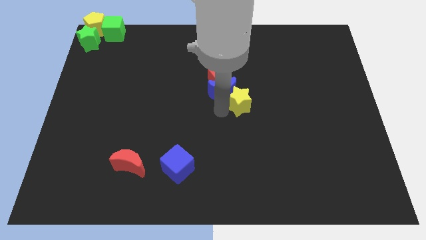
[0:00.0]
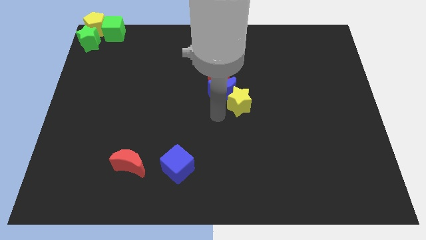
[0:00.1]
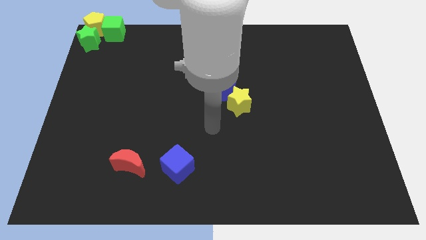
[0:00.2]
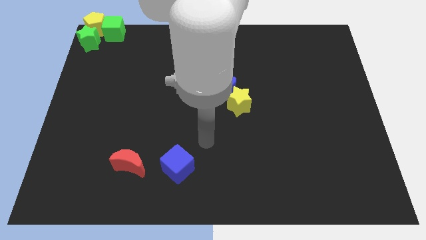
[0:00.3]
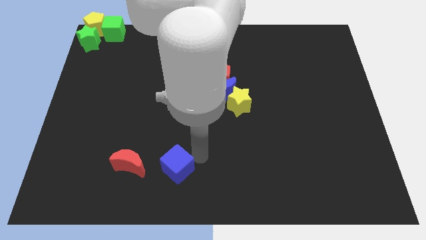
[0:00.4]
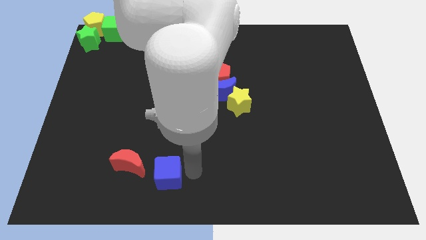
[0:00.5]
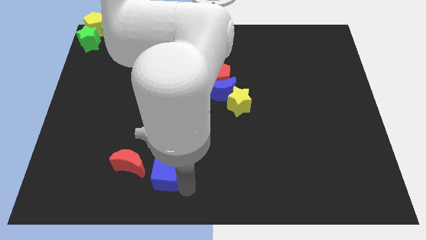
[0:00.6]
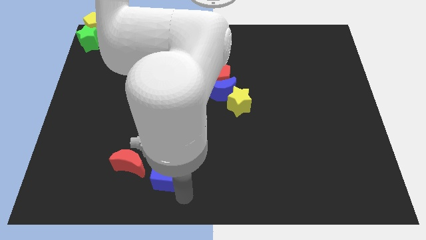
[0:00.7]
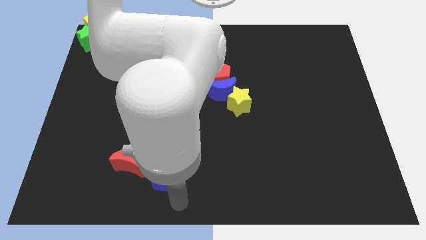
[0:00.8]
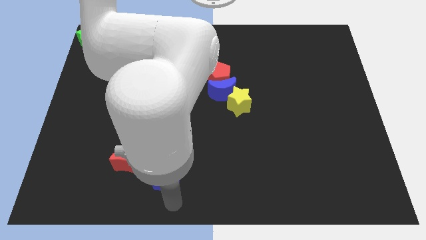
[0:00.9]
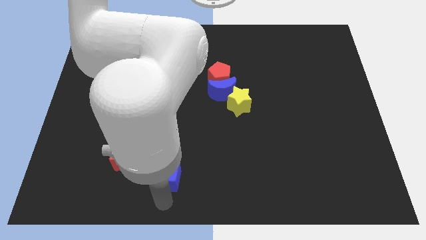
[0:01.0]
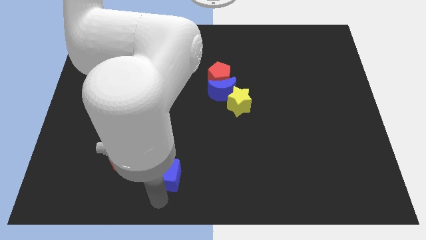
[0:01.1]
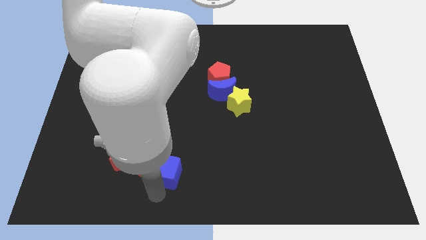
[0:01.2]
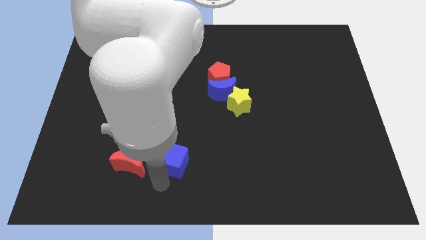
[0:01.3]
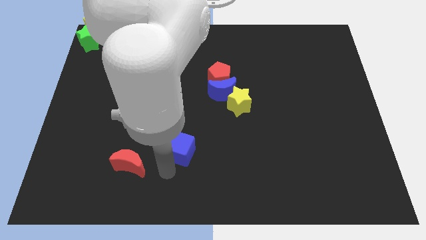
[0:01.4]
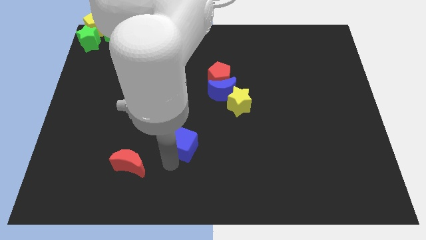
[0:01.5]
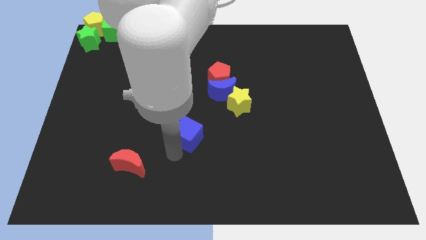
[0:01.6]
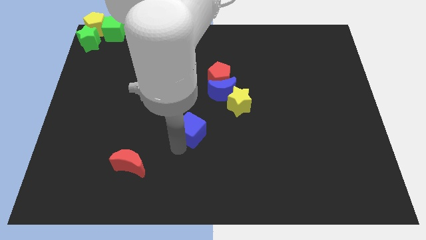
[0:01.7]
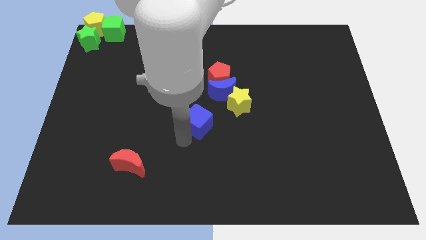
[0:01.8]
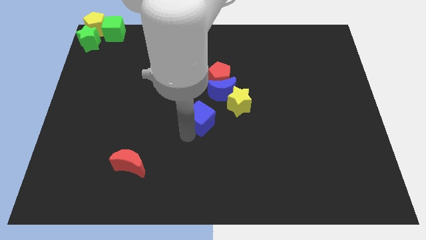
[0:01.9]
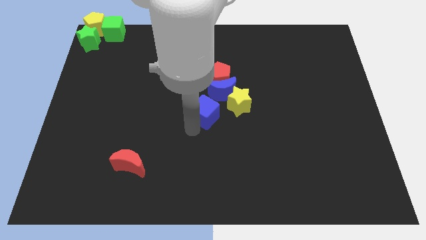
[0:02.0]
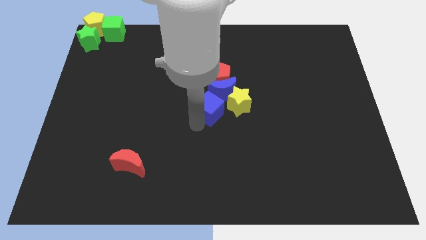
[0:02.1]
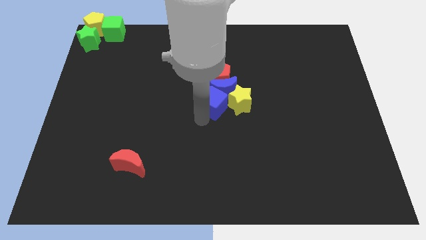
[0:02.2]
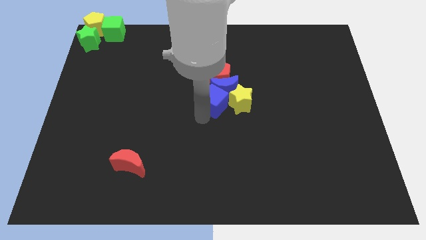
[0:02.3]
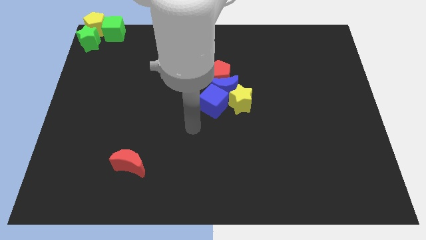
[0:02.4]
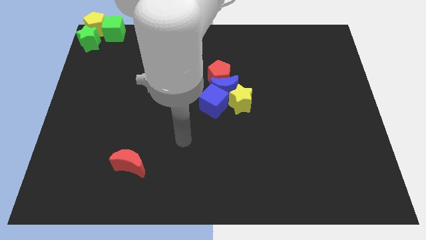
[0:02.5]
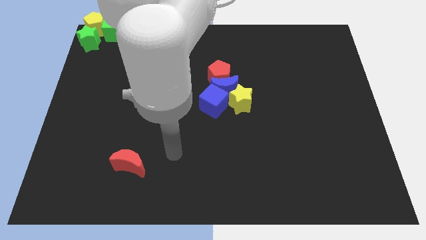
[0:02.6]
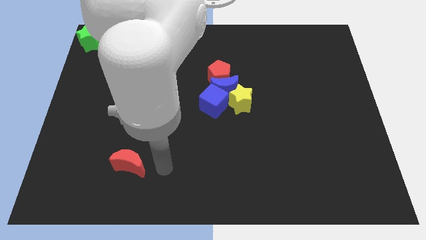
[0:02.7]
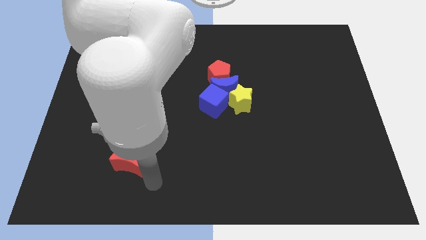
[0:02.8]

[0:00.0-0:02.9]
push the blue cube into the group of objects

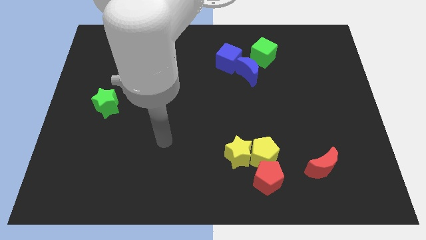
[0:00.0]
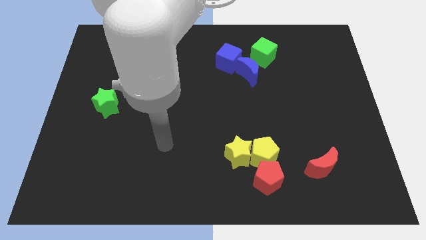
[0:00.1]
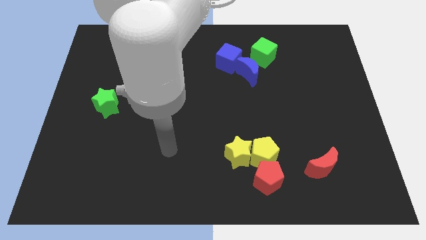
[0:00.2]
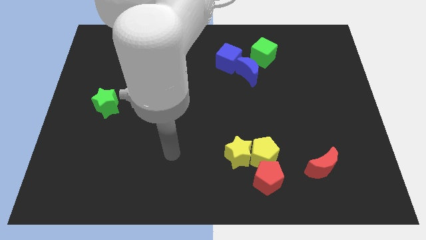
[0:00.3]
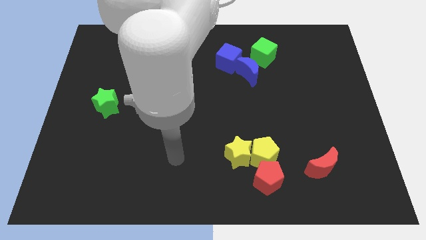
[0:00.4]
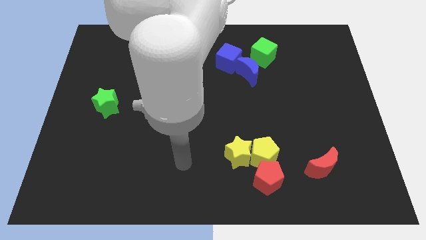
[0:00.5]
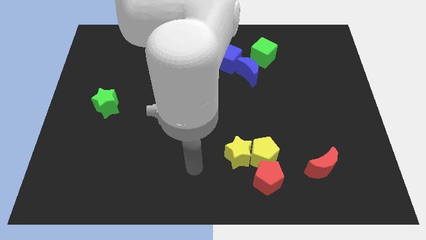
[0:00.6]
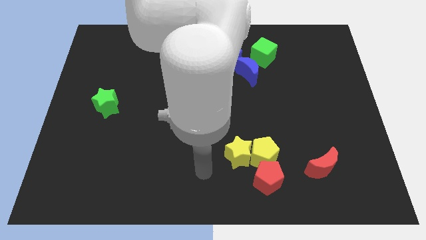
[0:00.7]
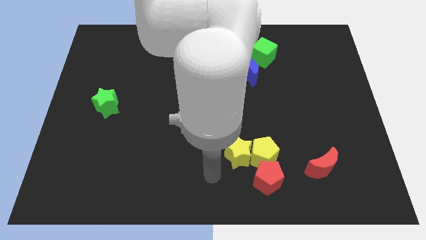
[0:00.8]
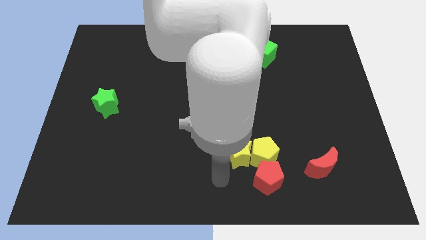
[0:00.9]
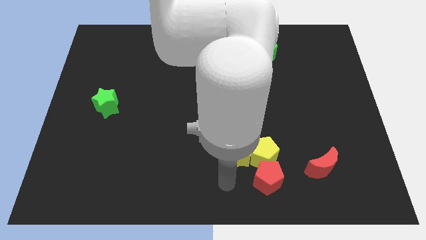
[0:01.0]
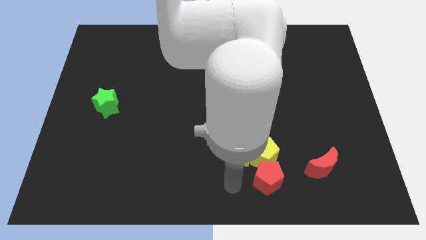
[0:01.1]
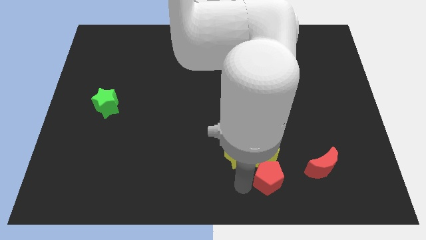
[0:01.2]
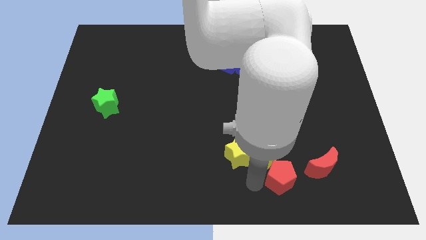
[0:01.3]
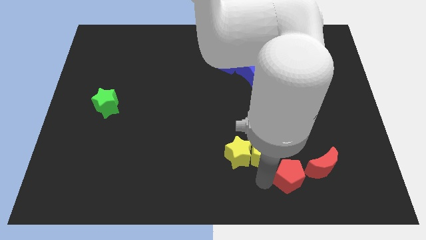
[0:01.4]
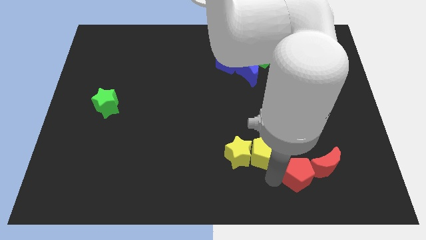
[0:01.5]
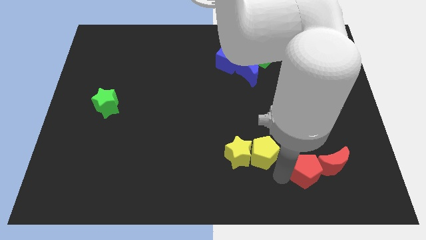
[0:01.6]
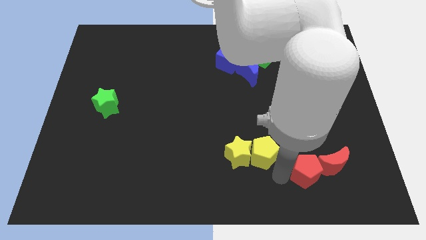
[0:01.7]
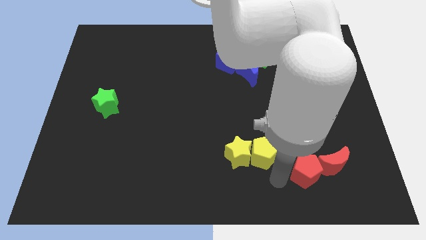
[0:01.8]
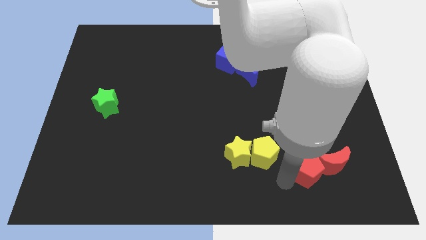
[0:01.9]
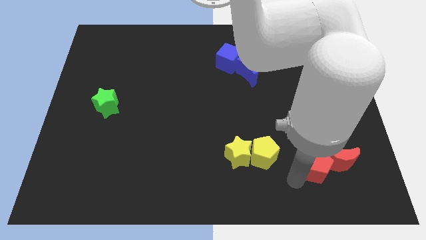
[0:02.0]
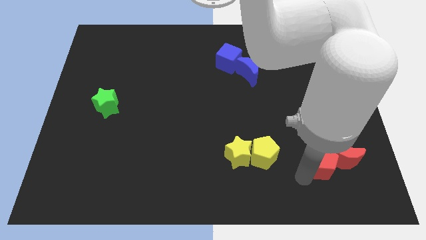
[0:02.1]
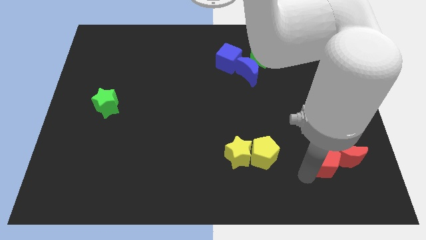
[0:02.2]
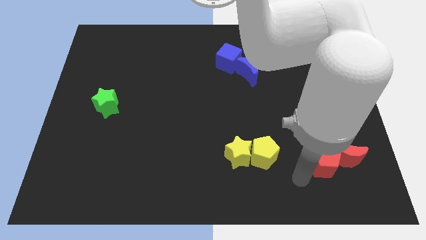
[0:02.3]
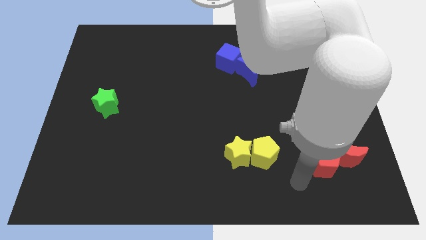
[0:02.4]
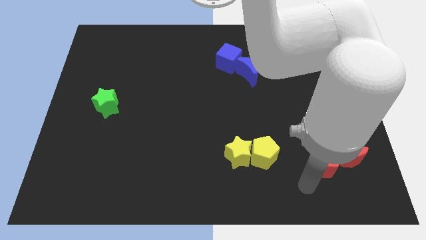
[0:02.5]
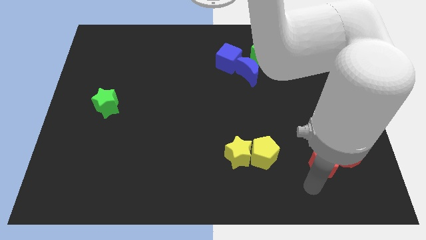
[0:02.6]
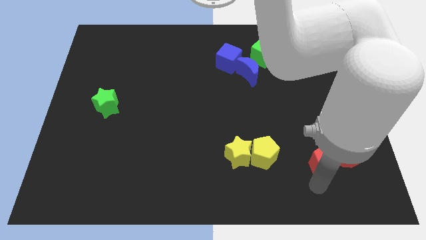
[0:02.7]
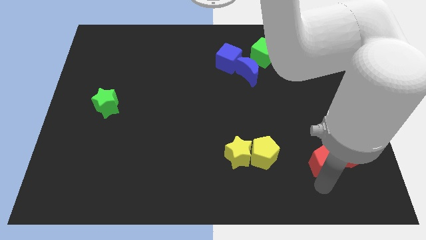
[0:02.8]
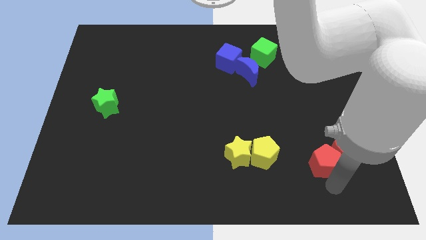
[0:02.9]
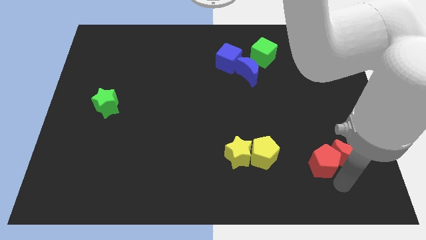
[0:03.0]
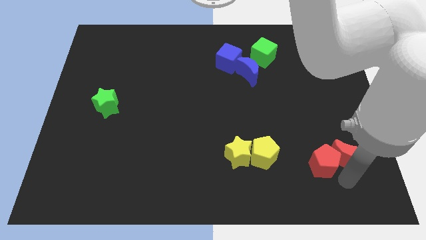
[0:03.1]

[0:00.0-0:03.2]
push the red pentagon into the red crescent

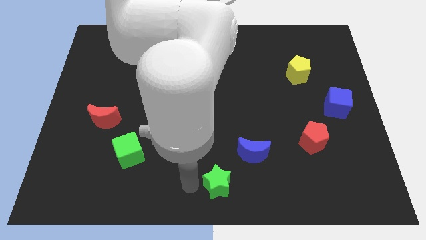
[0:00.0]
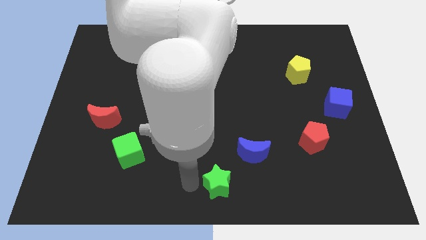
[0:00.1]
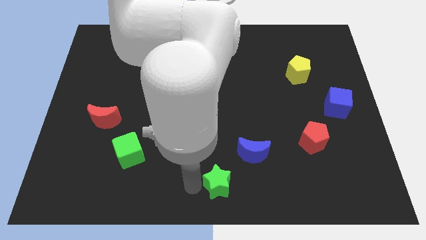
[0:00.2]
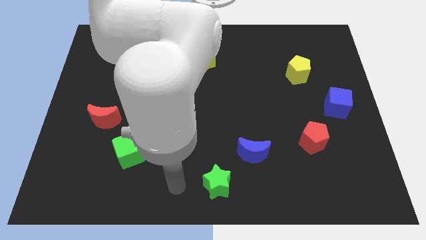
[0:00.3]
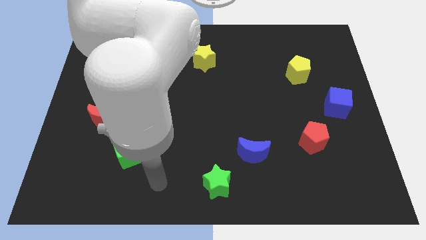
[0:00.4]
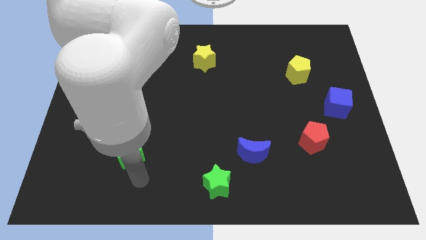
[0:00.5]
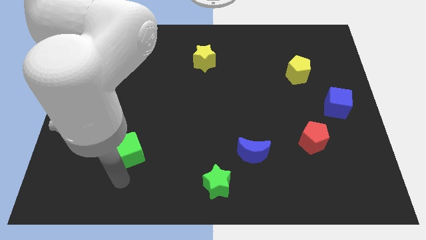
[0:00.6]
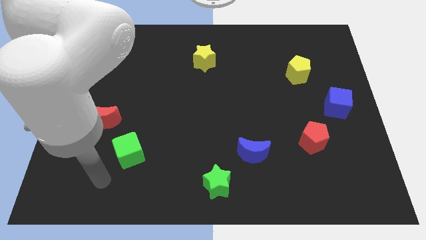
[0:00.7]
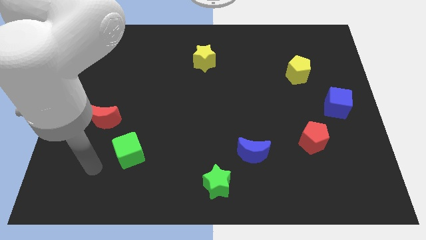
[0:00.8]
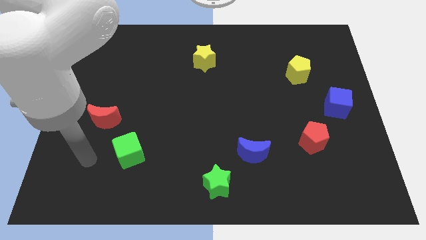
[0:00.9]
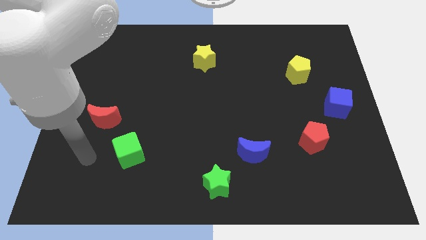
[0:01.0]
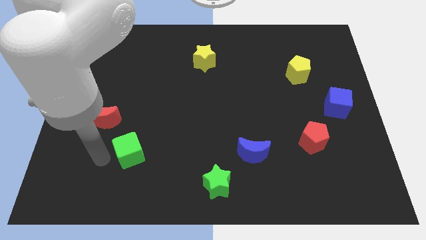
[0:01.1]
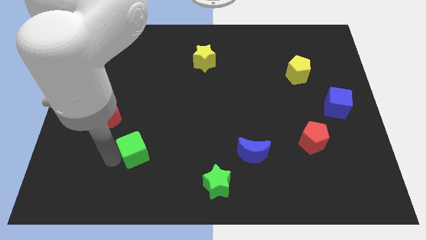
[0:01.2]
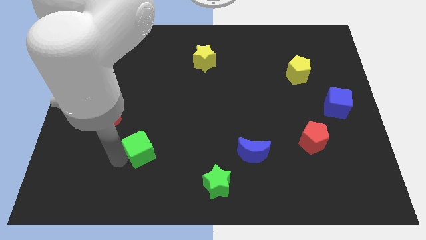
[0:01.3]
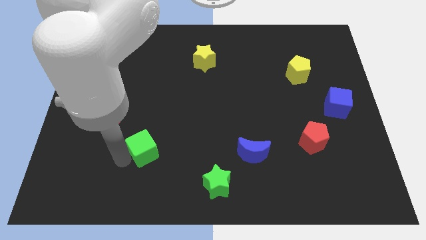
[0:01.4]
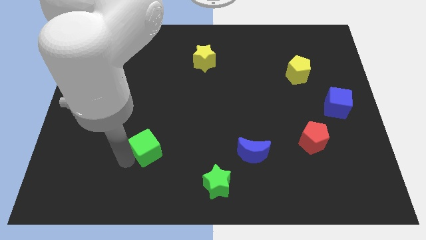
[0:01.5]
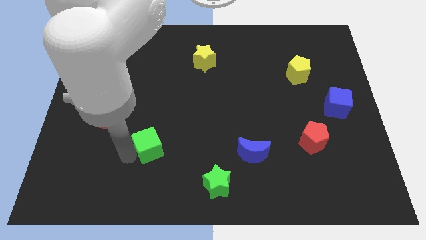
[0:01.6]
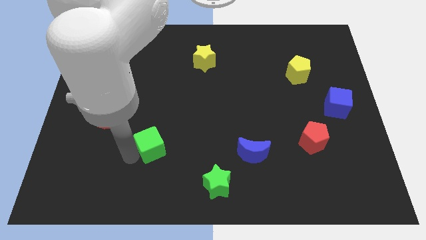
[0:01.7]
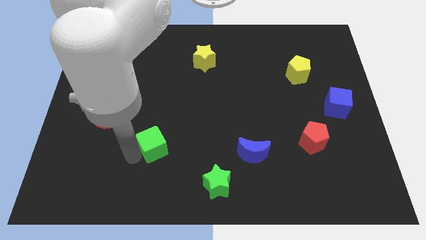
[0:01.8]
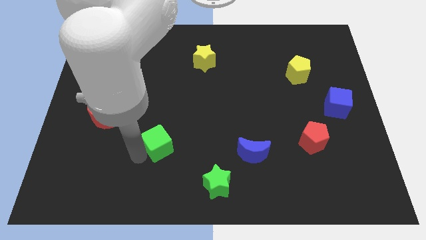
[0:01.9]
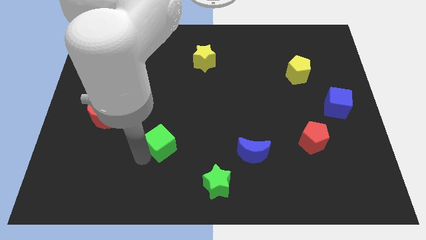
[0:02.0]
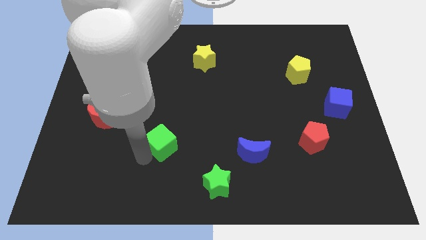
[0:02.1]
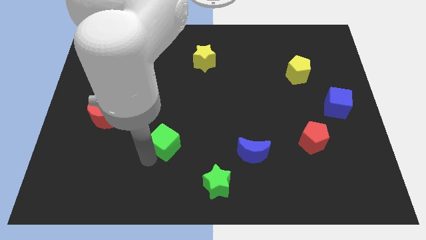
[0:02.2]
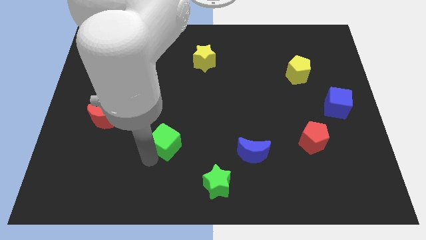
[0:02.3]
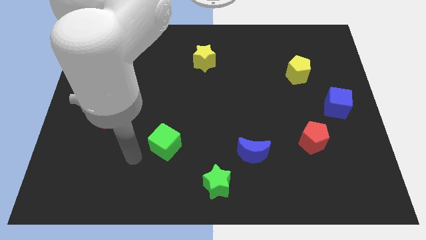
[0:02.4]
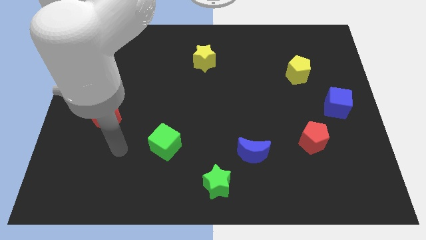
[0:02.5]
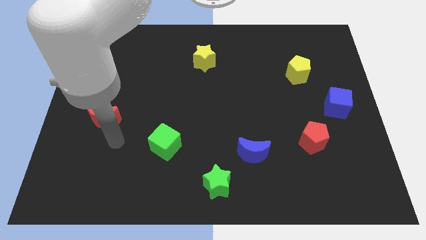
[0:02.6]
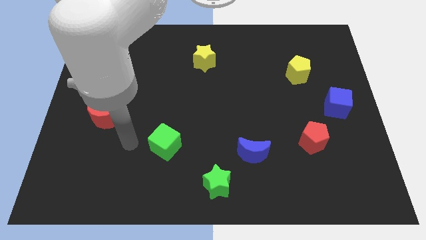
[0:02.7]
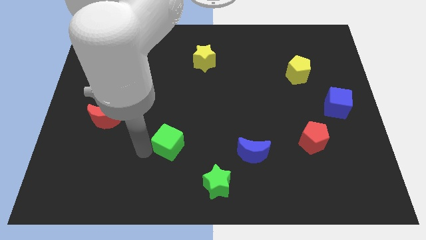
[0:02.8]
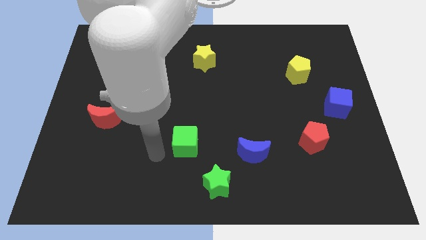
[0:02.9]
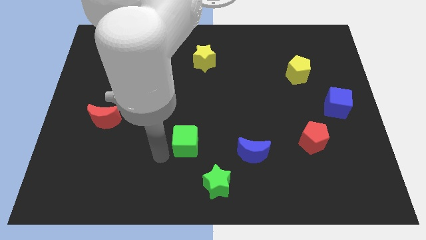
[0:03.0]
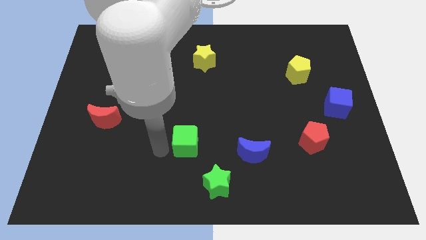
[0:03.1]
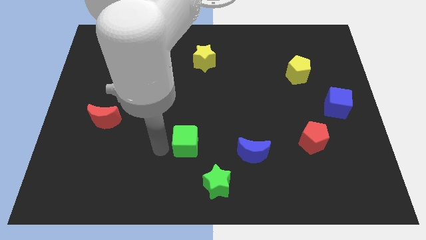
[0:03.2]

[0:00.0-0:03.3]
slide the green cube towards the left side of the blue crescent
